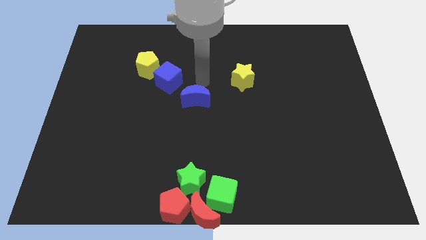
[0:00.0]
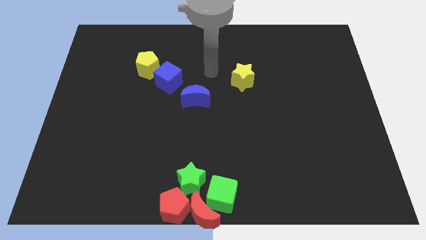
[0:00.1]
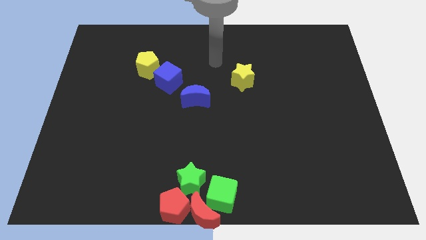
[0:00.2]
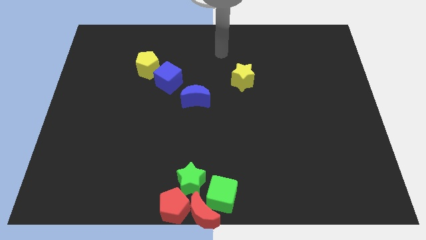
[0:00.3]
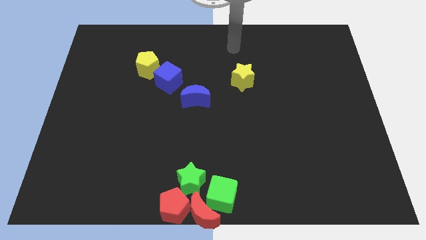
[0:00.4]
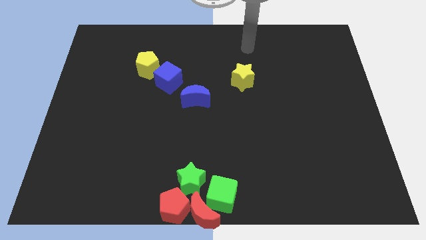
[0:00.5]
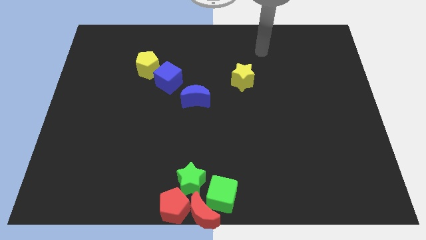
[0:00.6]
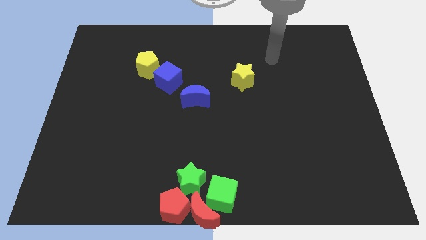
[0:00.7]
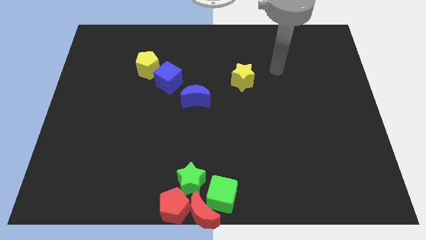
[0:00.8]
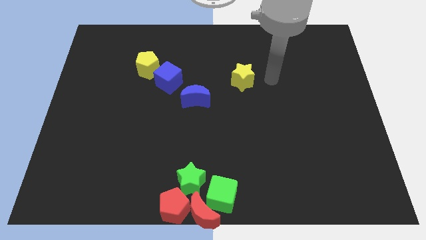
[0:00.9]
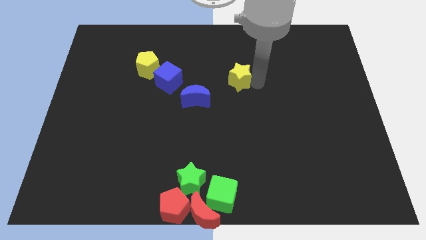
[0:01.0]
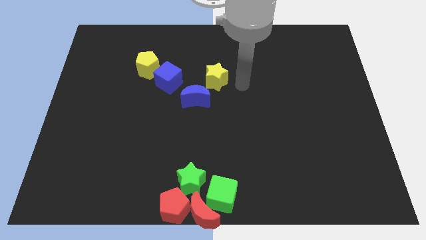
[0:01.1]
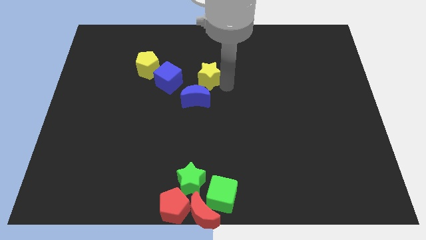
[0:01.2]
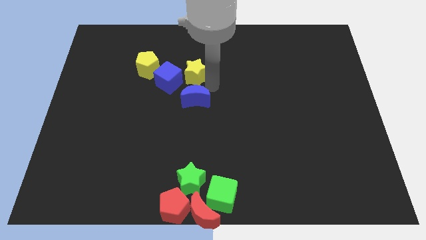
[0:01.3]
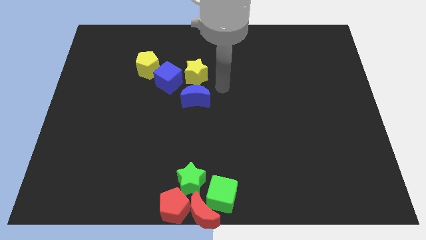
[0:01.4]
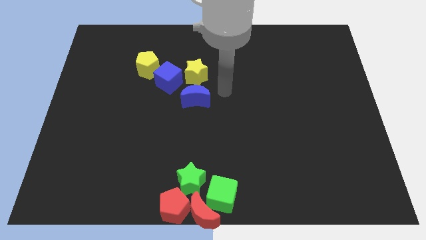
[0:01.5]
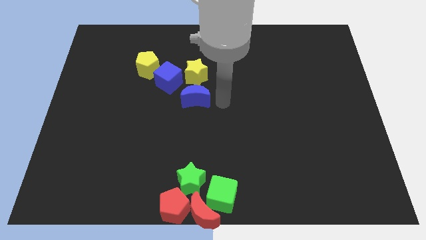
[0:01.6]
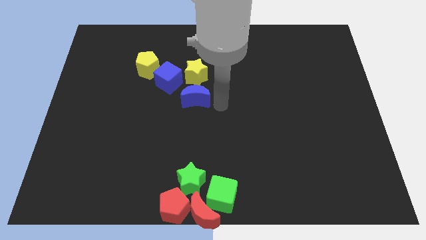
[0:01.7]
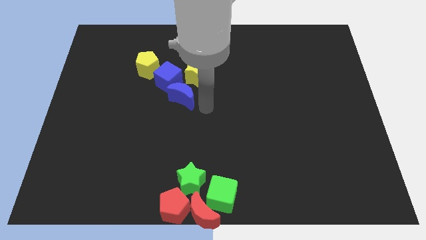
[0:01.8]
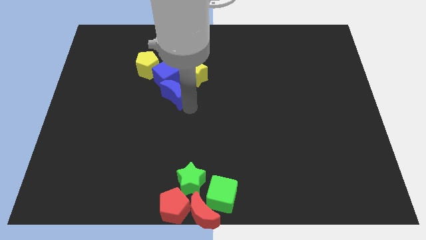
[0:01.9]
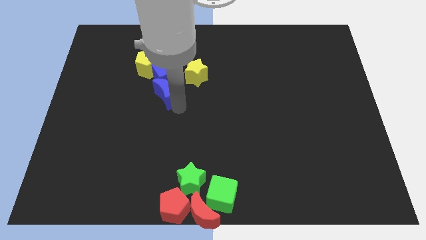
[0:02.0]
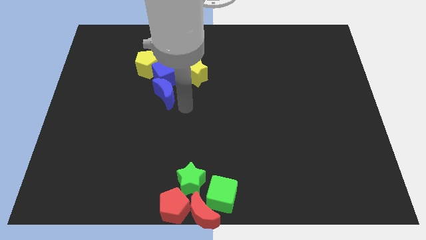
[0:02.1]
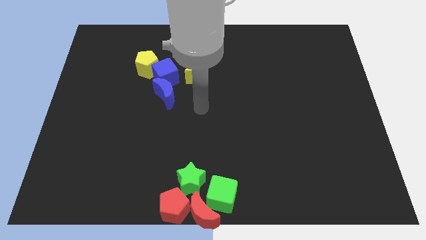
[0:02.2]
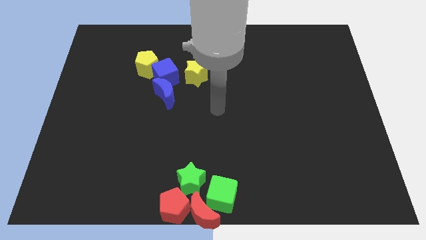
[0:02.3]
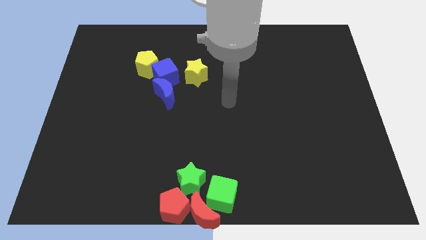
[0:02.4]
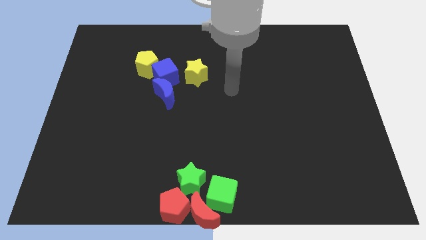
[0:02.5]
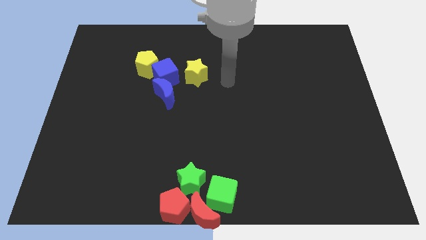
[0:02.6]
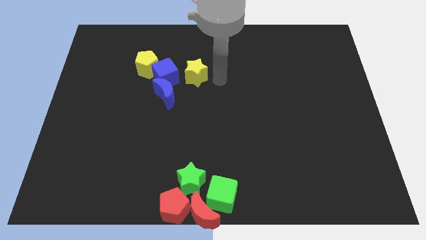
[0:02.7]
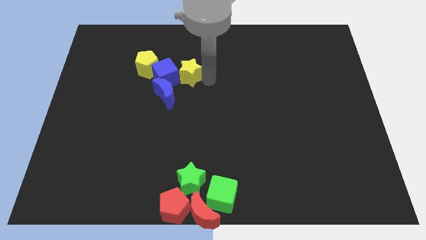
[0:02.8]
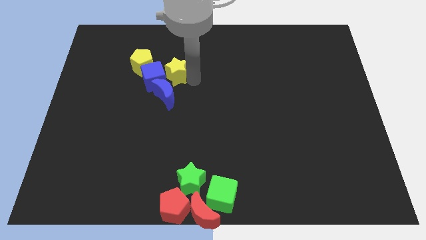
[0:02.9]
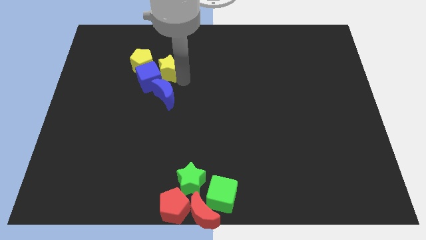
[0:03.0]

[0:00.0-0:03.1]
place the yellow star and blue moon into the group of blocks

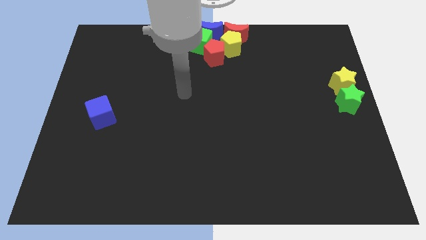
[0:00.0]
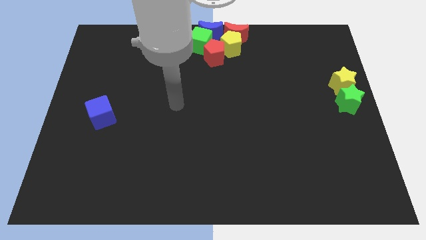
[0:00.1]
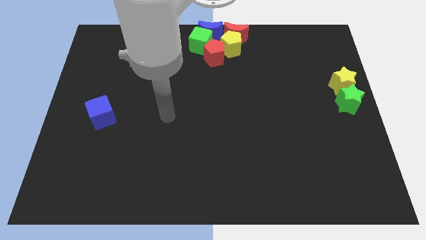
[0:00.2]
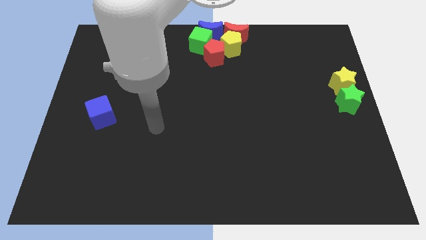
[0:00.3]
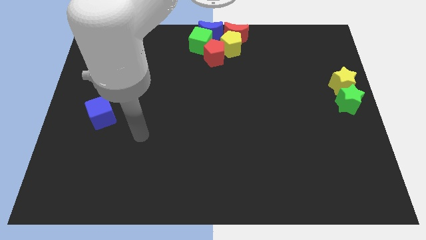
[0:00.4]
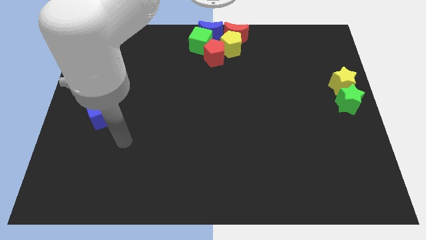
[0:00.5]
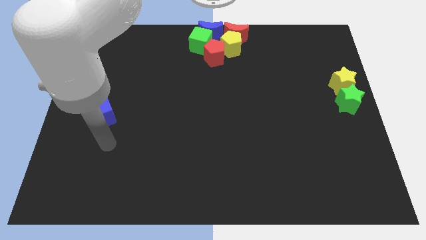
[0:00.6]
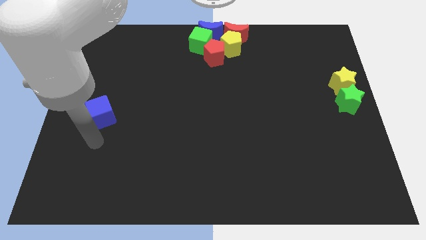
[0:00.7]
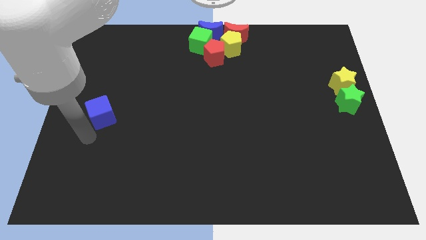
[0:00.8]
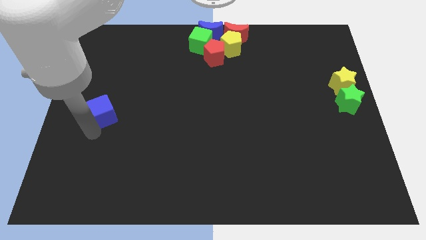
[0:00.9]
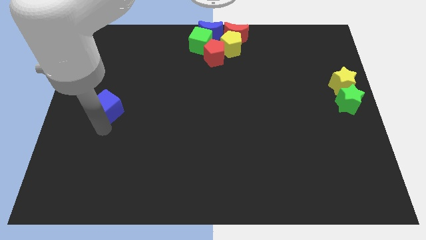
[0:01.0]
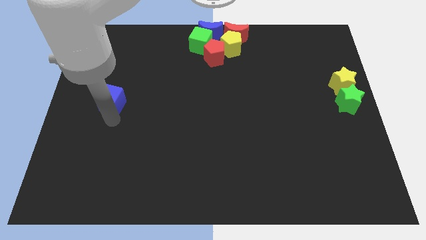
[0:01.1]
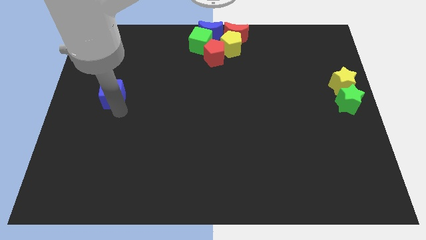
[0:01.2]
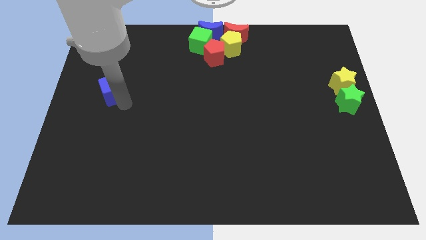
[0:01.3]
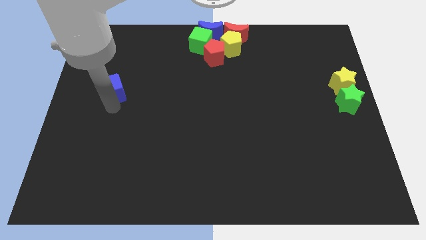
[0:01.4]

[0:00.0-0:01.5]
push the blue cube horizontally to the left side of the yellow star

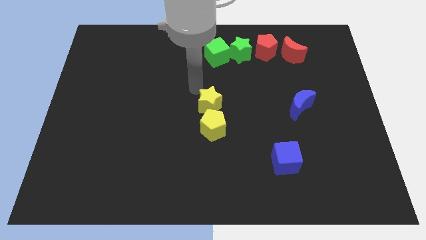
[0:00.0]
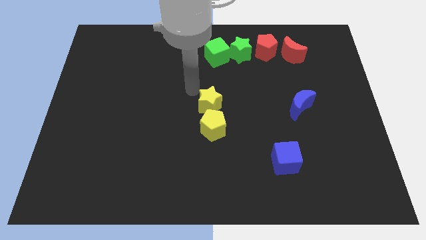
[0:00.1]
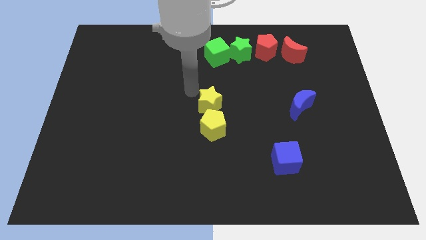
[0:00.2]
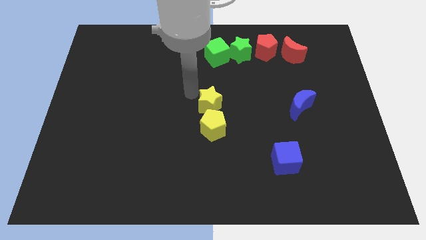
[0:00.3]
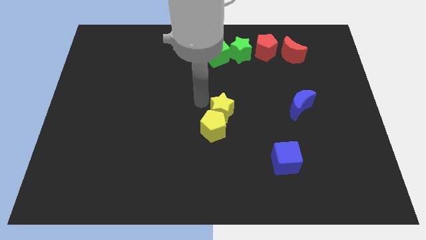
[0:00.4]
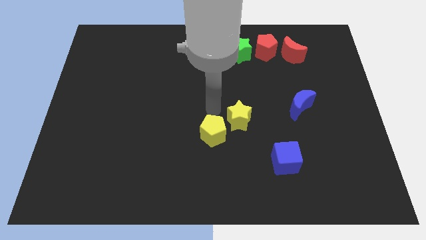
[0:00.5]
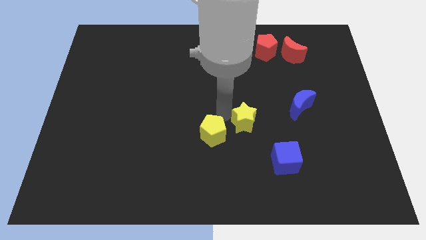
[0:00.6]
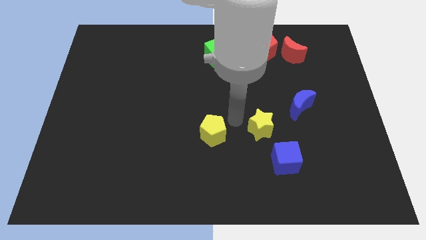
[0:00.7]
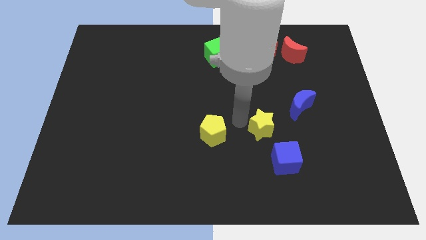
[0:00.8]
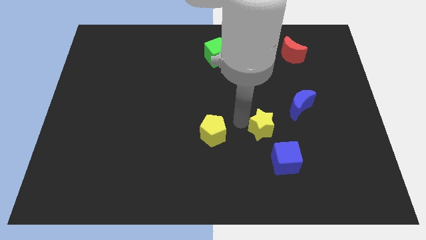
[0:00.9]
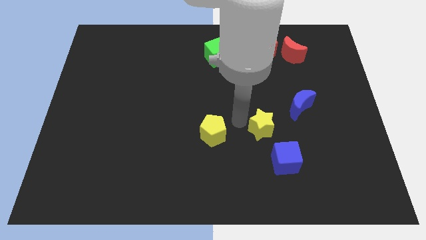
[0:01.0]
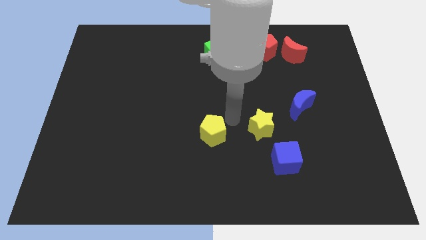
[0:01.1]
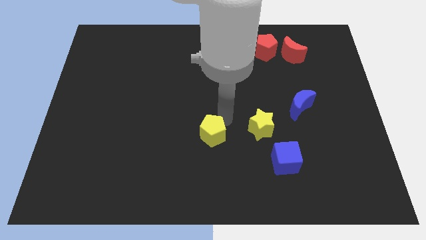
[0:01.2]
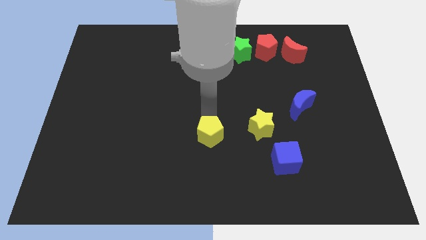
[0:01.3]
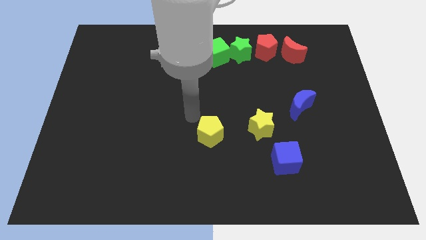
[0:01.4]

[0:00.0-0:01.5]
move yellow star apart from the yellow pentagon

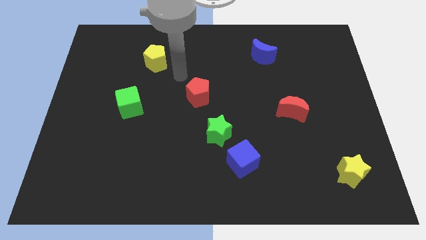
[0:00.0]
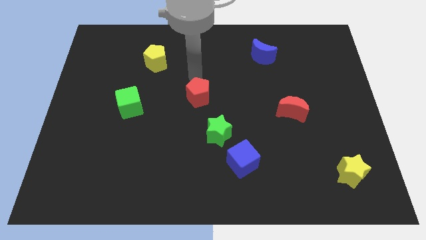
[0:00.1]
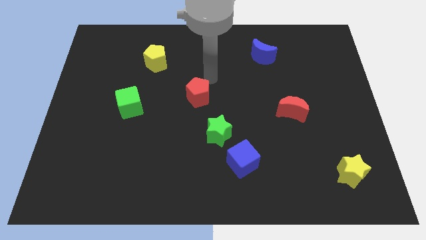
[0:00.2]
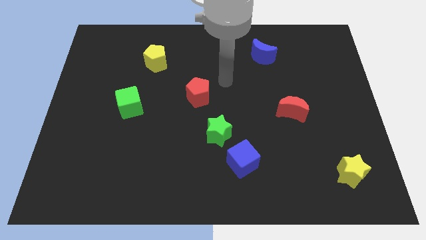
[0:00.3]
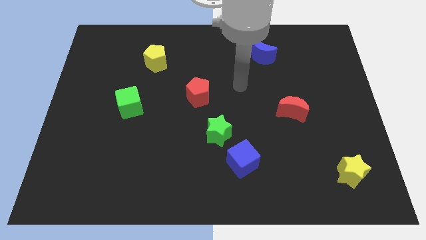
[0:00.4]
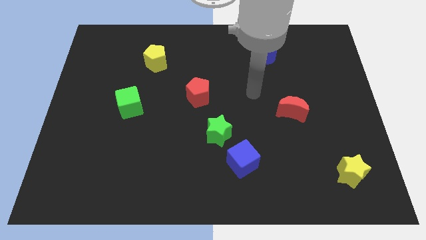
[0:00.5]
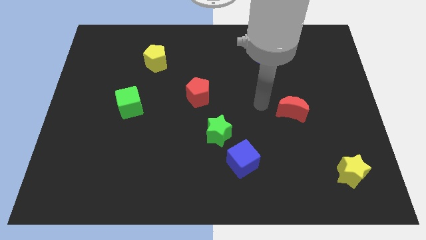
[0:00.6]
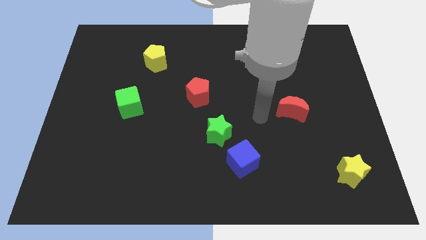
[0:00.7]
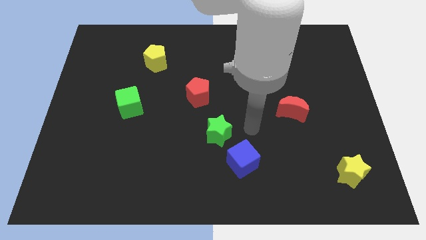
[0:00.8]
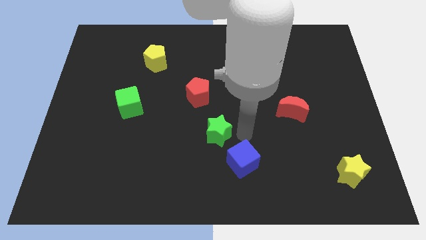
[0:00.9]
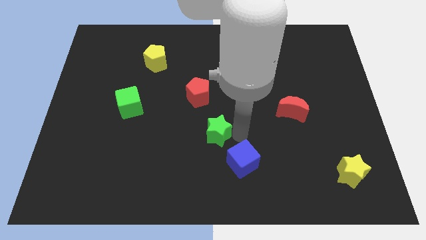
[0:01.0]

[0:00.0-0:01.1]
move yourself close to the right side of the green star

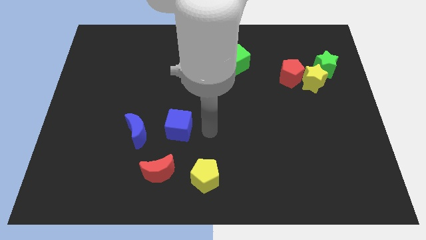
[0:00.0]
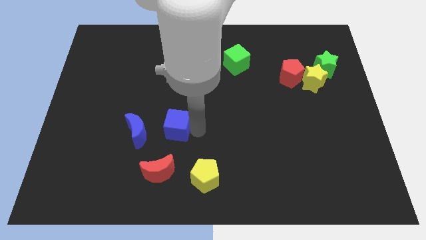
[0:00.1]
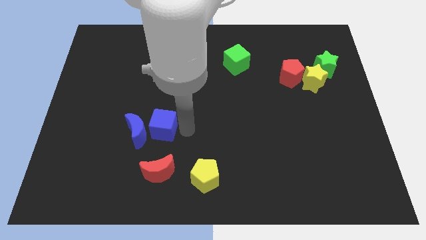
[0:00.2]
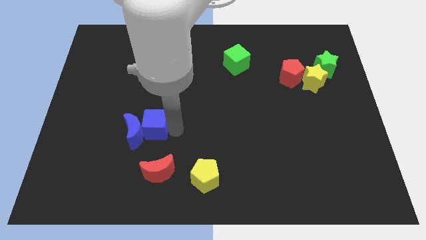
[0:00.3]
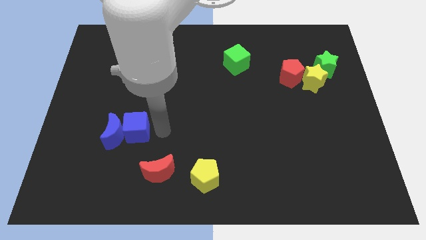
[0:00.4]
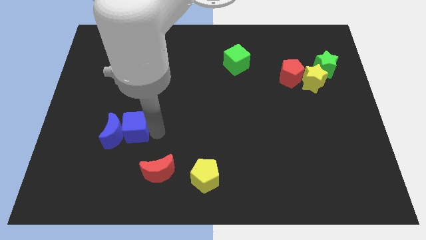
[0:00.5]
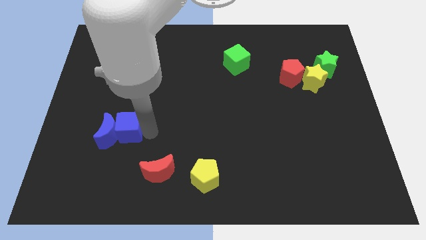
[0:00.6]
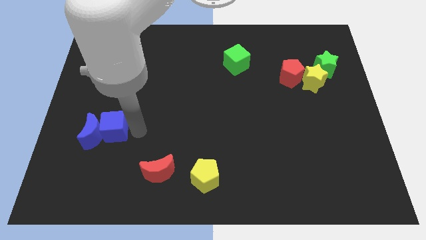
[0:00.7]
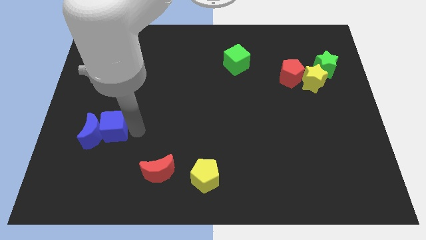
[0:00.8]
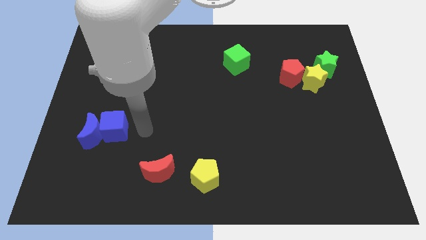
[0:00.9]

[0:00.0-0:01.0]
push the blue cube into the blue crescent

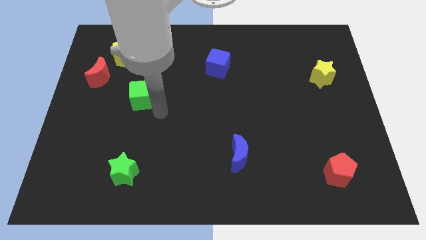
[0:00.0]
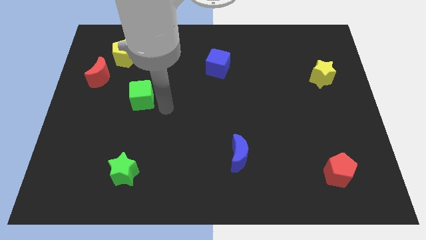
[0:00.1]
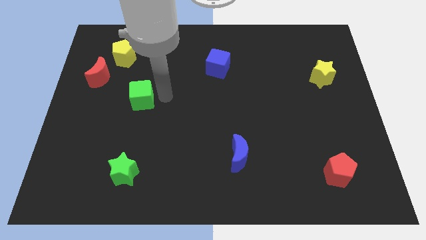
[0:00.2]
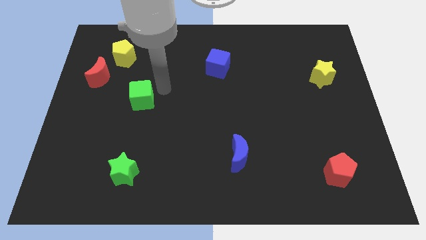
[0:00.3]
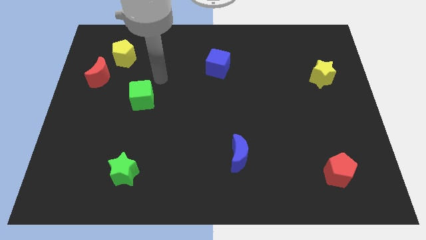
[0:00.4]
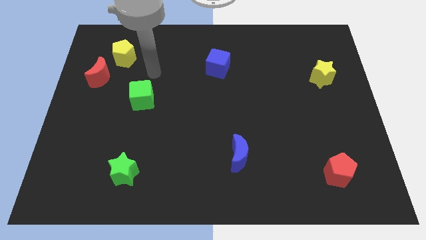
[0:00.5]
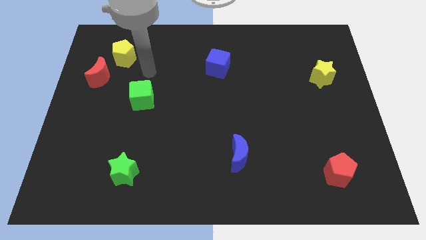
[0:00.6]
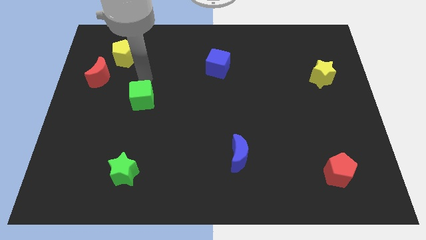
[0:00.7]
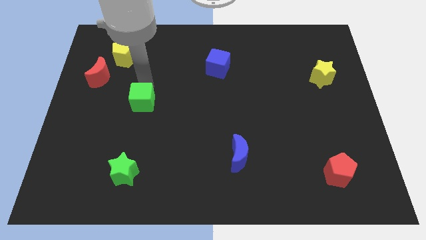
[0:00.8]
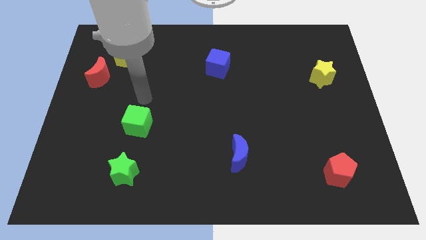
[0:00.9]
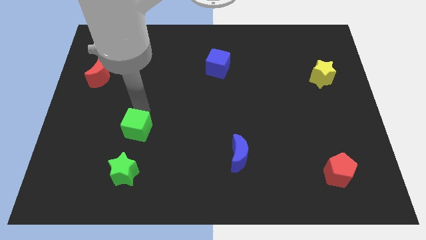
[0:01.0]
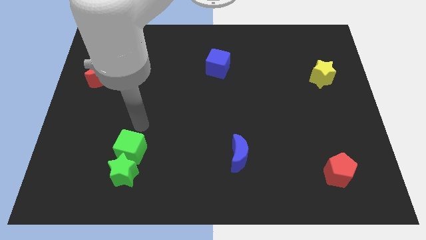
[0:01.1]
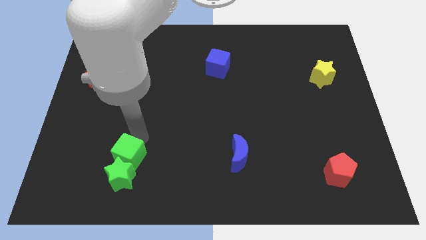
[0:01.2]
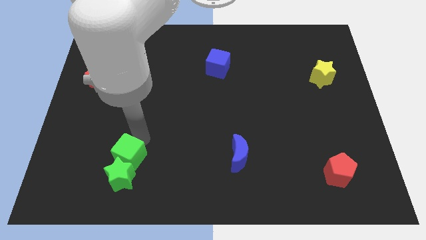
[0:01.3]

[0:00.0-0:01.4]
place the green cube at the top of green star
